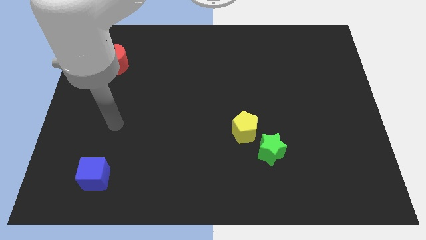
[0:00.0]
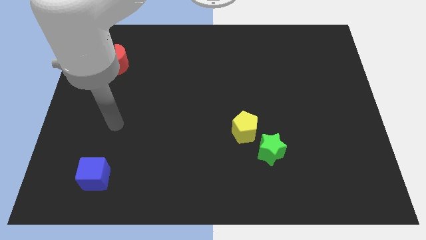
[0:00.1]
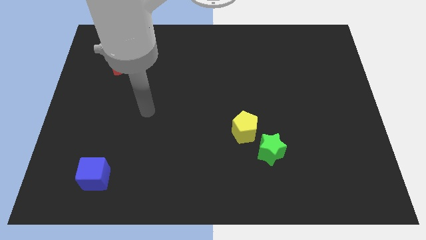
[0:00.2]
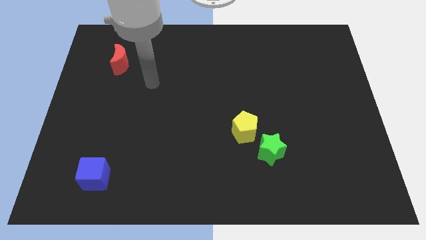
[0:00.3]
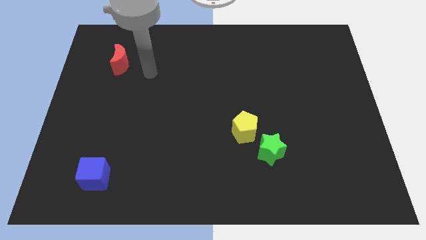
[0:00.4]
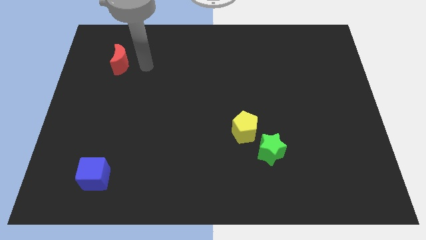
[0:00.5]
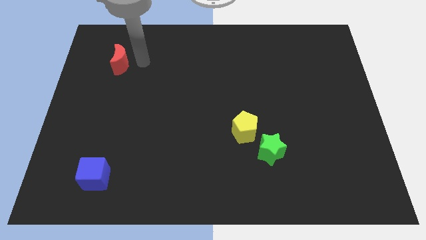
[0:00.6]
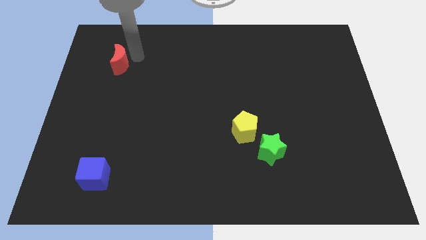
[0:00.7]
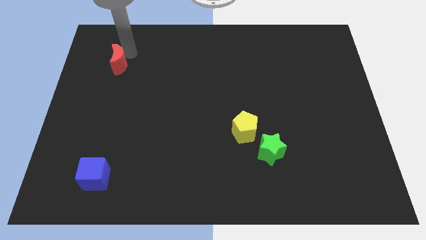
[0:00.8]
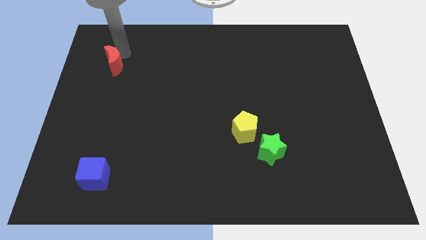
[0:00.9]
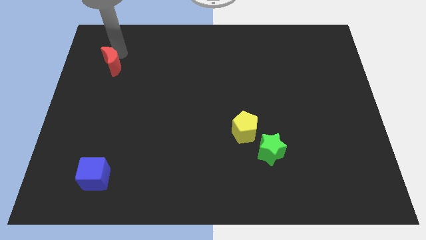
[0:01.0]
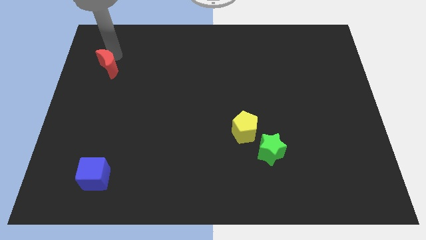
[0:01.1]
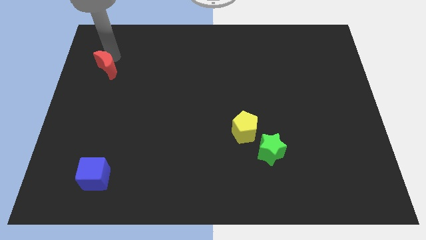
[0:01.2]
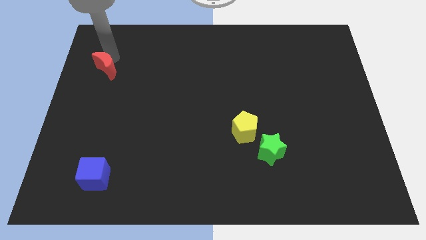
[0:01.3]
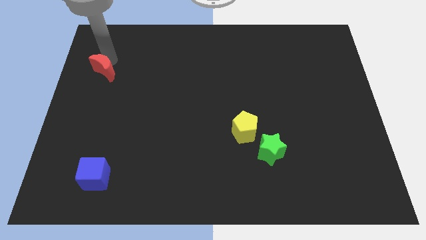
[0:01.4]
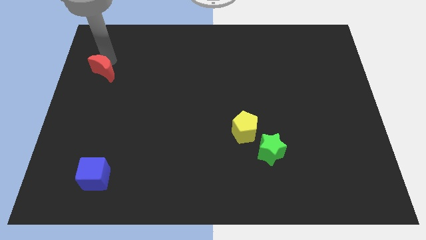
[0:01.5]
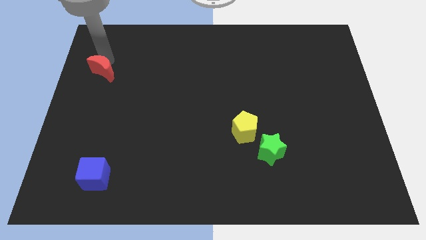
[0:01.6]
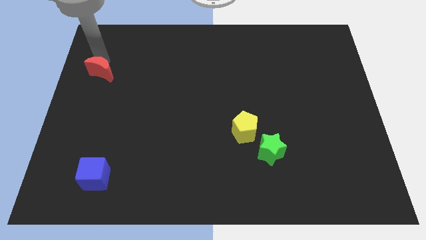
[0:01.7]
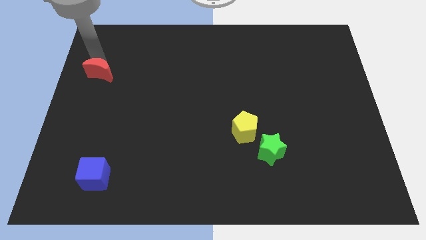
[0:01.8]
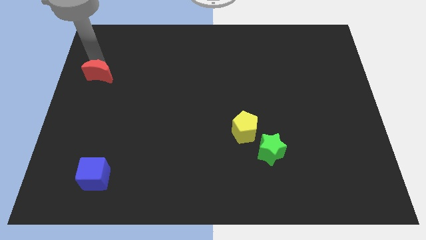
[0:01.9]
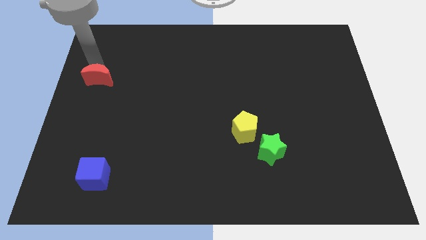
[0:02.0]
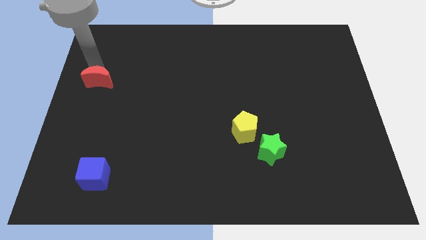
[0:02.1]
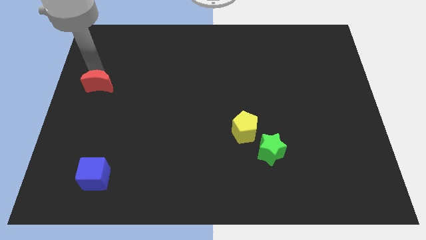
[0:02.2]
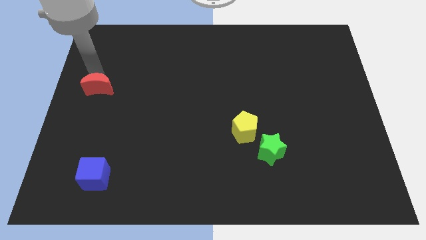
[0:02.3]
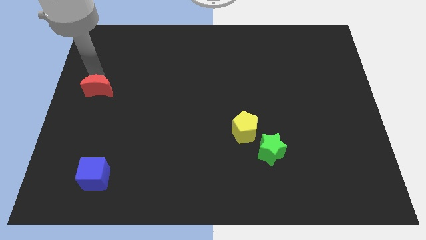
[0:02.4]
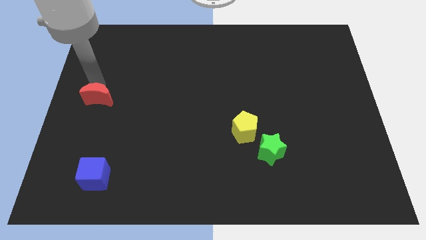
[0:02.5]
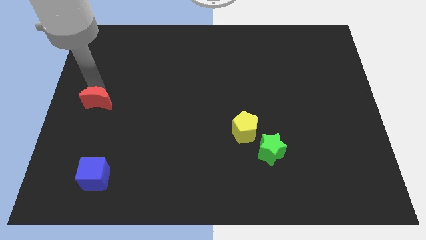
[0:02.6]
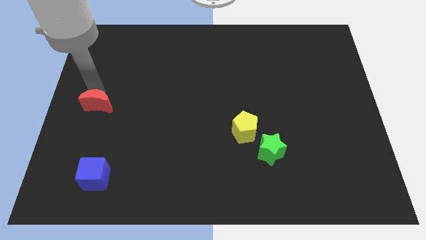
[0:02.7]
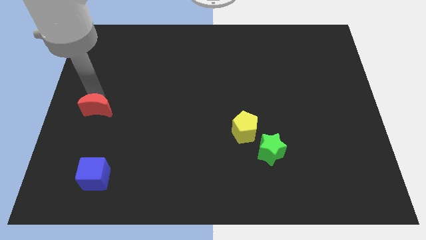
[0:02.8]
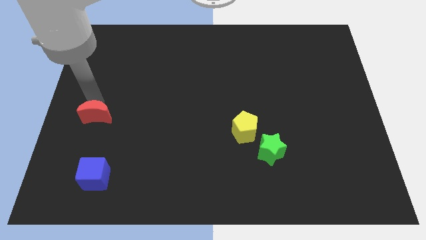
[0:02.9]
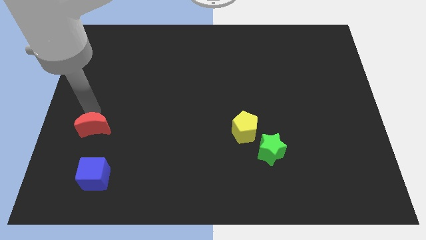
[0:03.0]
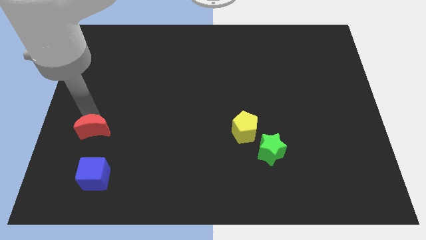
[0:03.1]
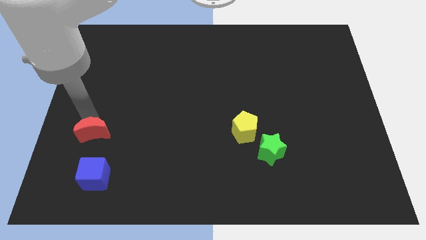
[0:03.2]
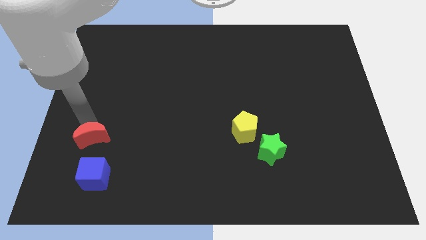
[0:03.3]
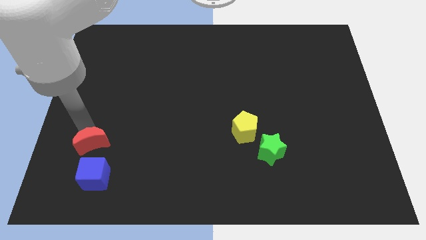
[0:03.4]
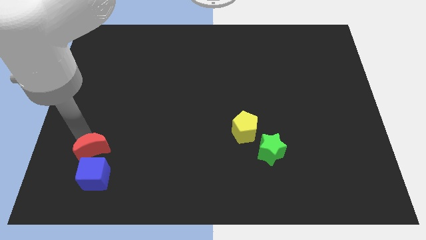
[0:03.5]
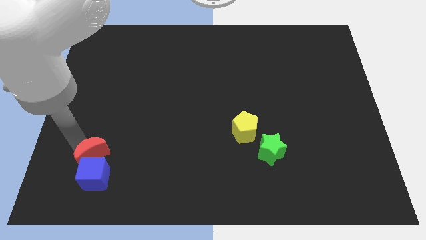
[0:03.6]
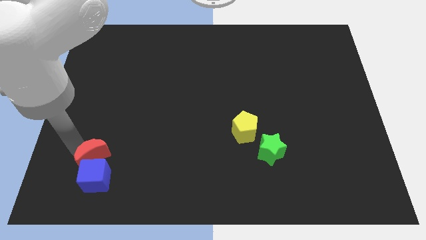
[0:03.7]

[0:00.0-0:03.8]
move the moon to the blue block

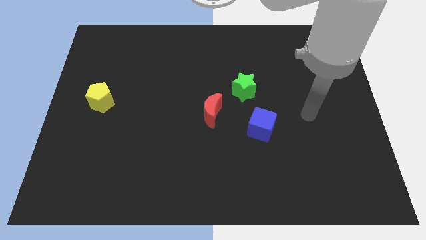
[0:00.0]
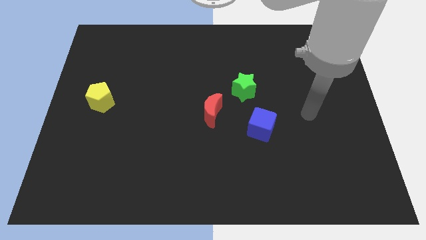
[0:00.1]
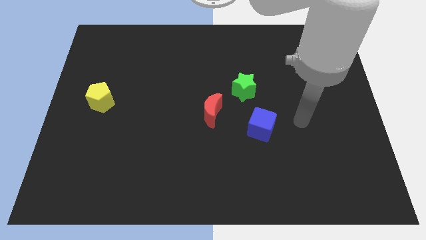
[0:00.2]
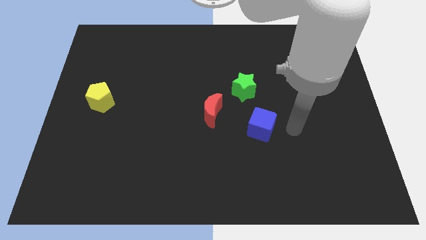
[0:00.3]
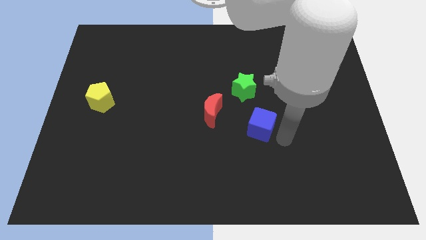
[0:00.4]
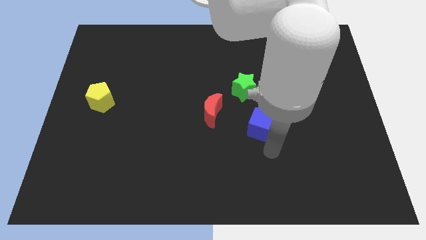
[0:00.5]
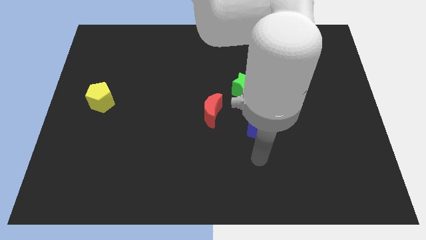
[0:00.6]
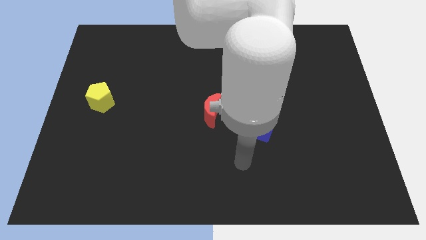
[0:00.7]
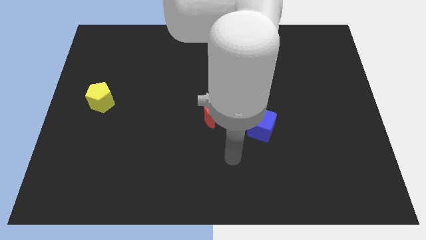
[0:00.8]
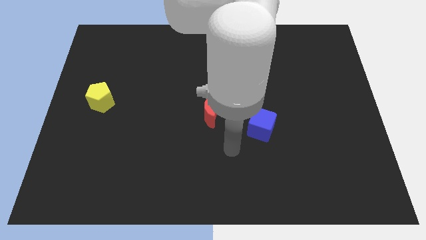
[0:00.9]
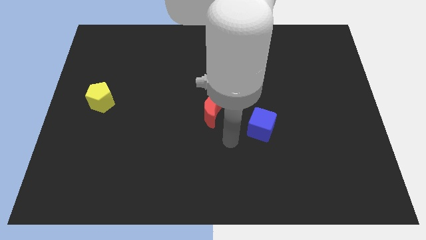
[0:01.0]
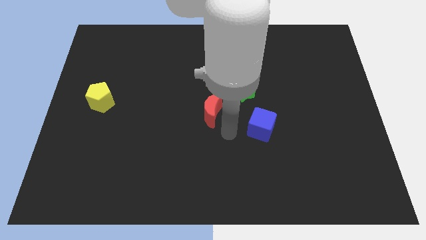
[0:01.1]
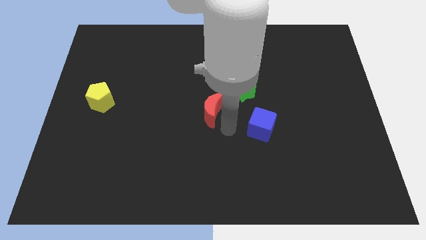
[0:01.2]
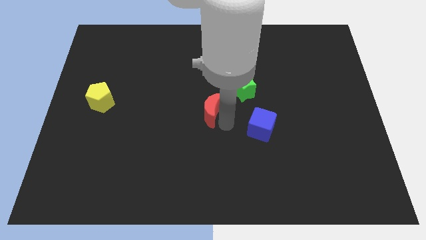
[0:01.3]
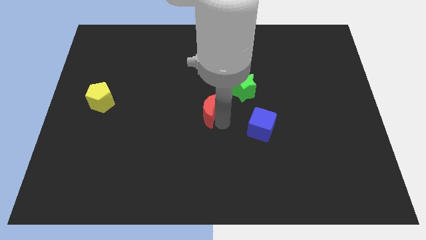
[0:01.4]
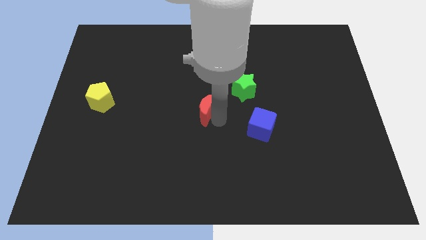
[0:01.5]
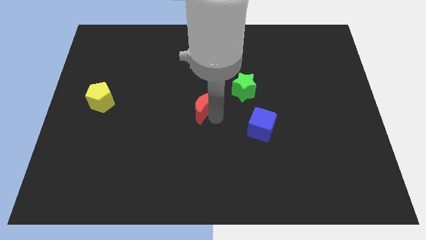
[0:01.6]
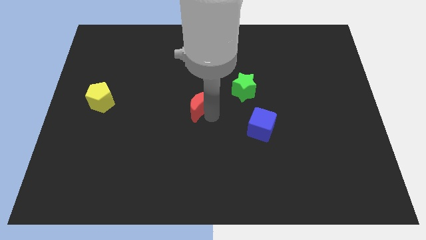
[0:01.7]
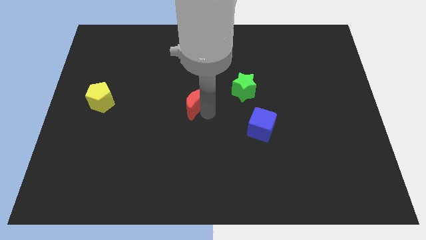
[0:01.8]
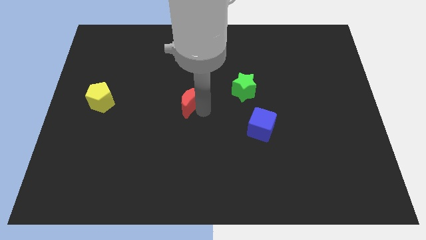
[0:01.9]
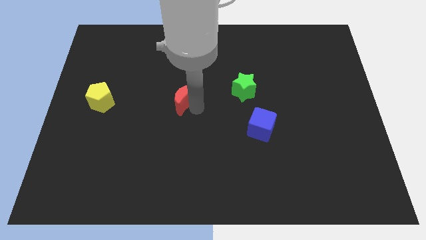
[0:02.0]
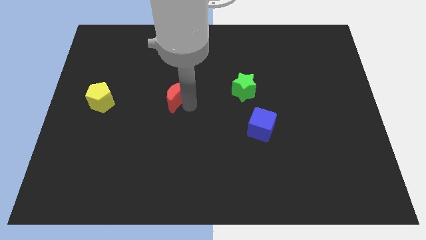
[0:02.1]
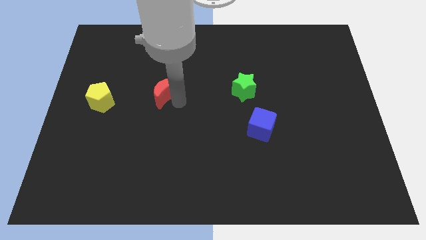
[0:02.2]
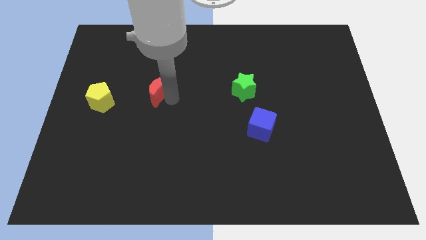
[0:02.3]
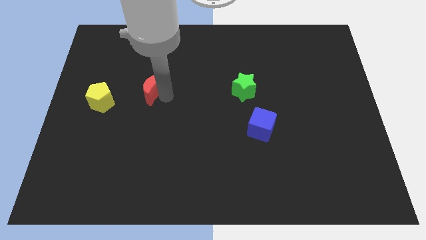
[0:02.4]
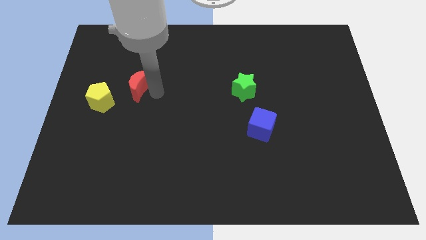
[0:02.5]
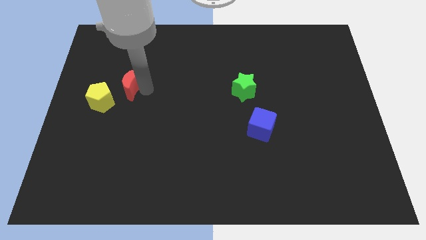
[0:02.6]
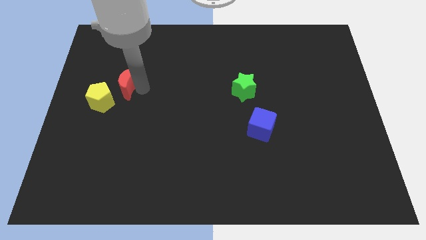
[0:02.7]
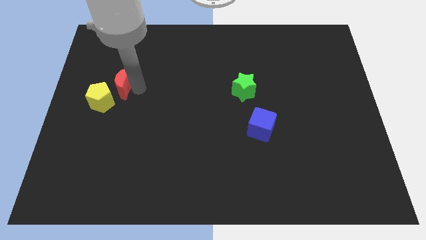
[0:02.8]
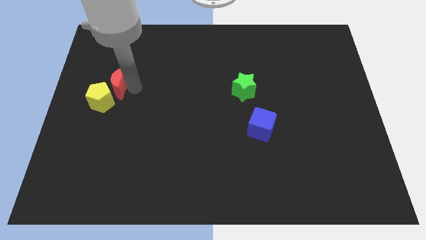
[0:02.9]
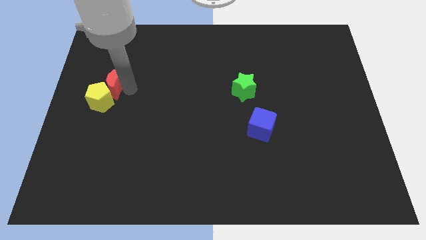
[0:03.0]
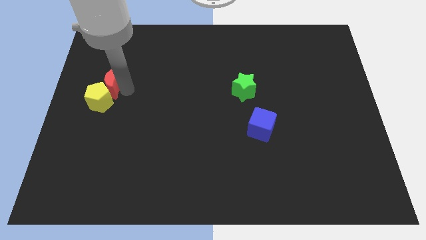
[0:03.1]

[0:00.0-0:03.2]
put the red block next to the pentagon

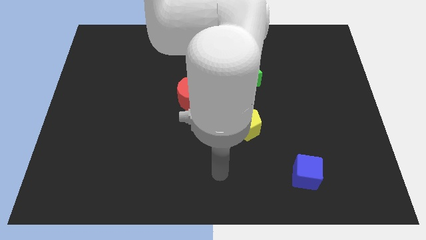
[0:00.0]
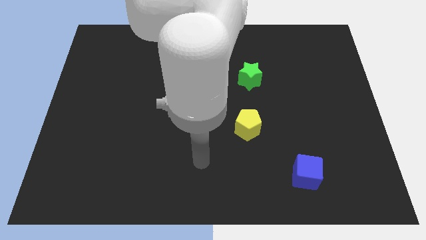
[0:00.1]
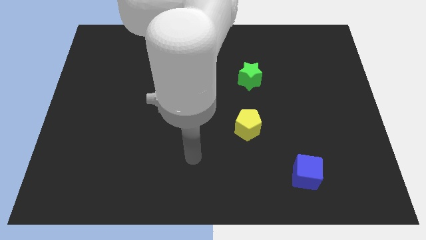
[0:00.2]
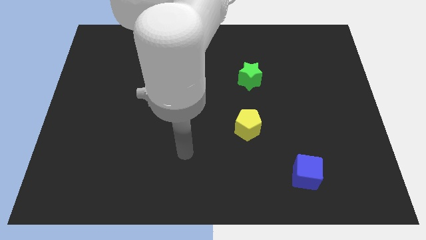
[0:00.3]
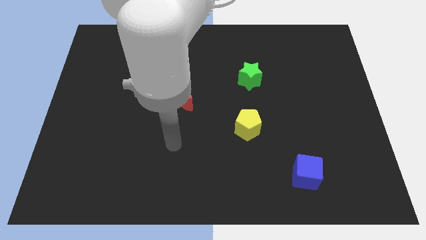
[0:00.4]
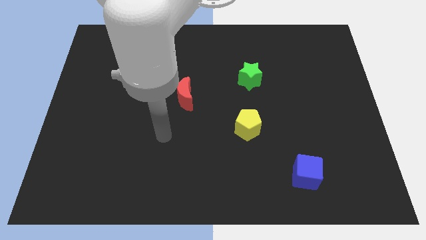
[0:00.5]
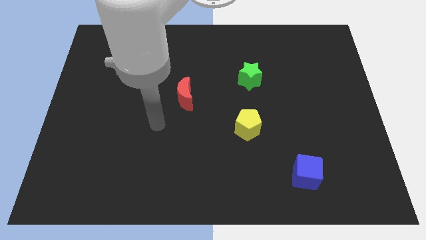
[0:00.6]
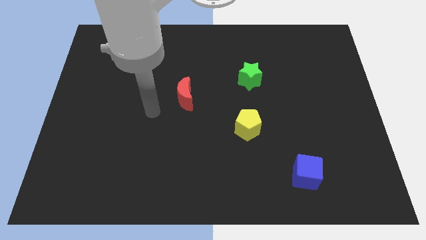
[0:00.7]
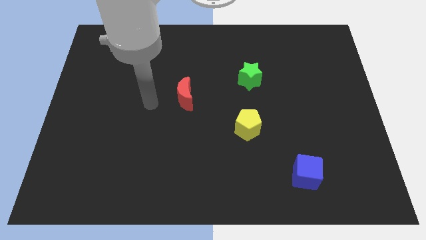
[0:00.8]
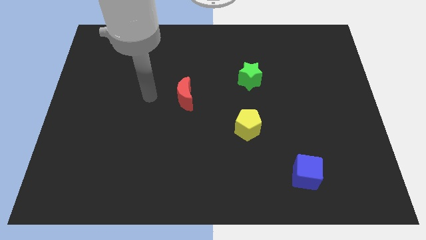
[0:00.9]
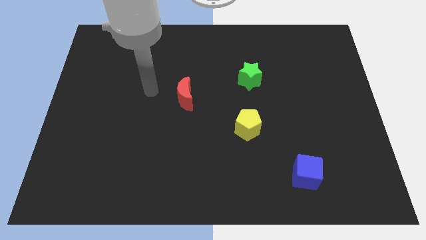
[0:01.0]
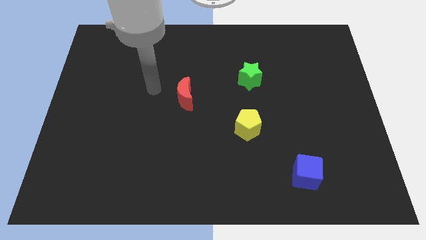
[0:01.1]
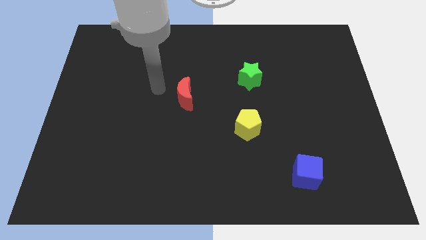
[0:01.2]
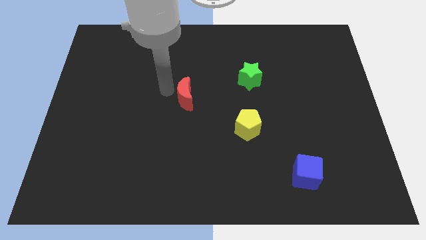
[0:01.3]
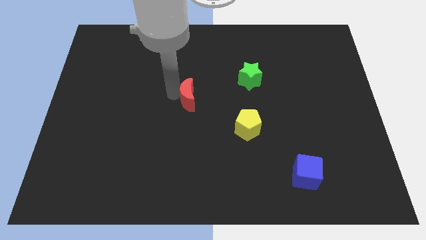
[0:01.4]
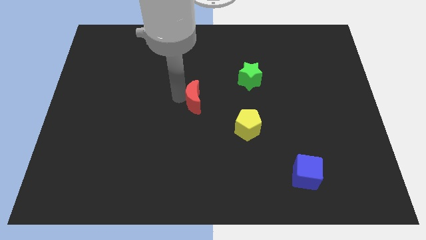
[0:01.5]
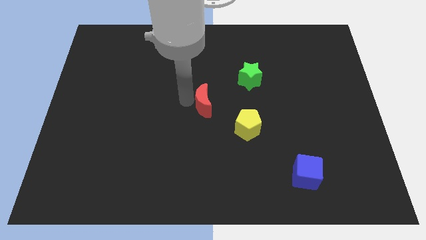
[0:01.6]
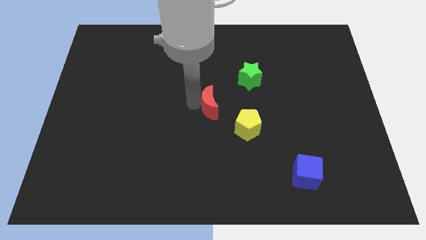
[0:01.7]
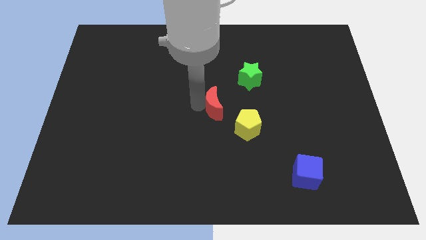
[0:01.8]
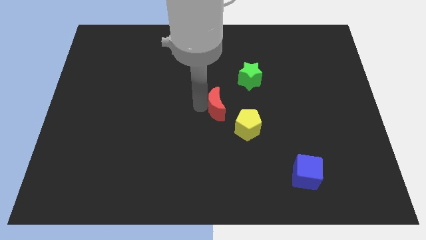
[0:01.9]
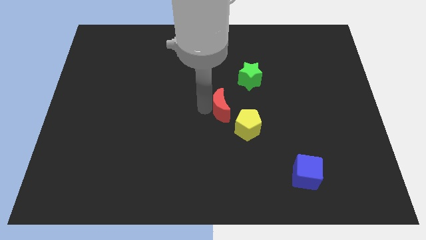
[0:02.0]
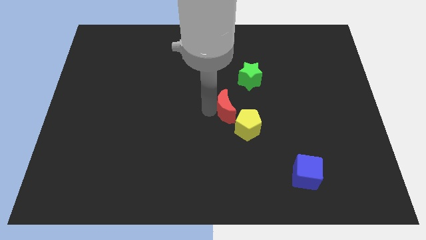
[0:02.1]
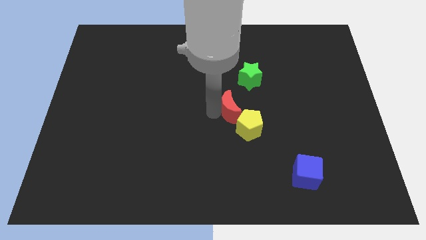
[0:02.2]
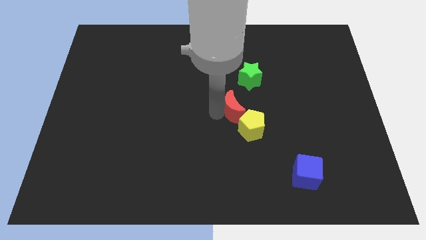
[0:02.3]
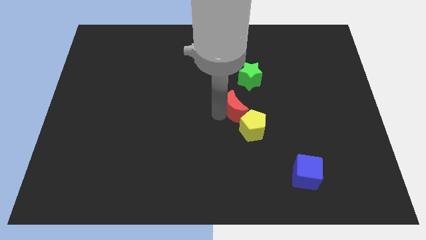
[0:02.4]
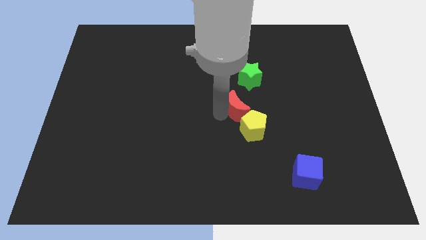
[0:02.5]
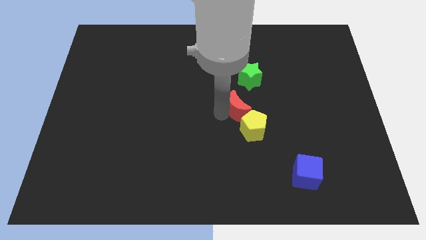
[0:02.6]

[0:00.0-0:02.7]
put the red moon to the yellow block
